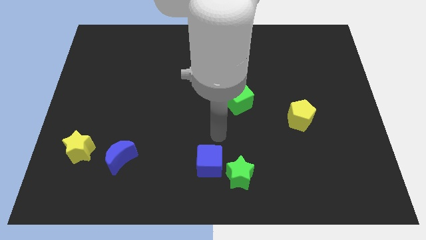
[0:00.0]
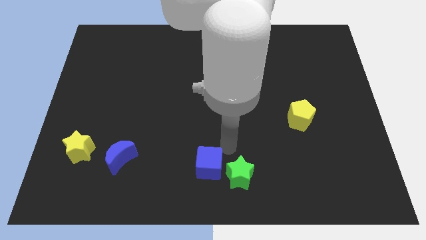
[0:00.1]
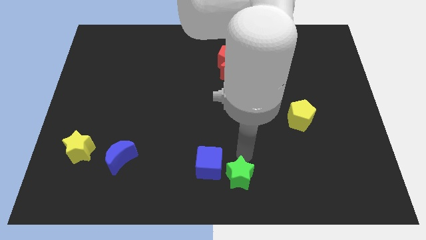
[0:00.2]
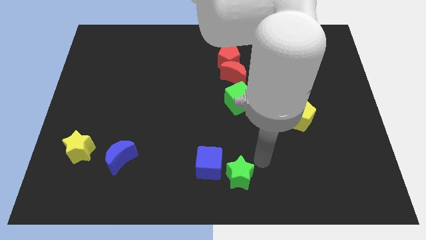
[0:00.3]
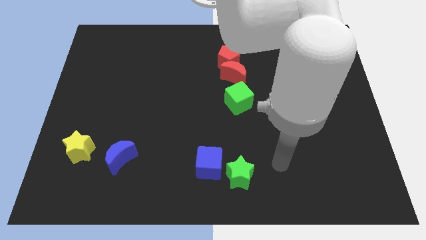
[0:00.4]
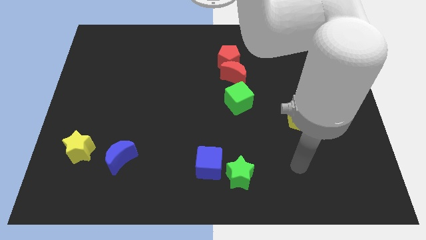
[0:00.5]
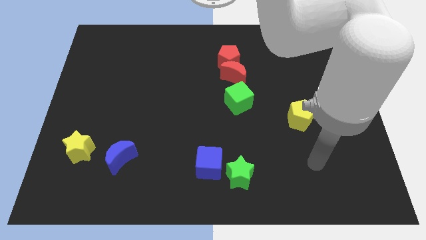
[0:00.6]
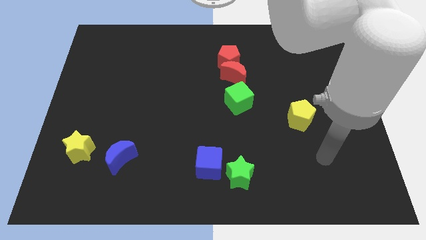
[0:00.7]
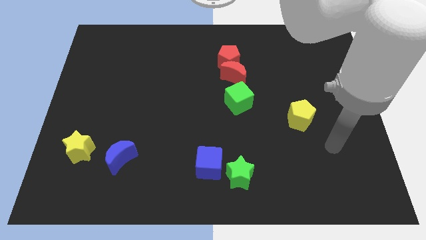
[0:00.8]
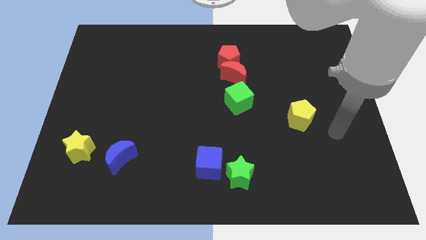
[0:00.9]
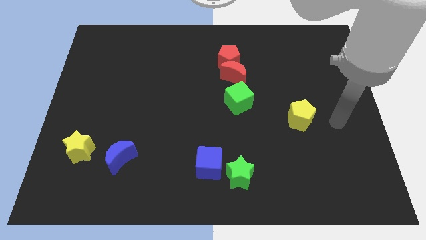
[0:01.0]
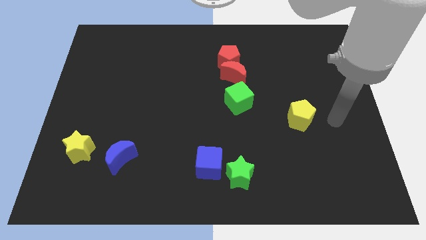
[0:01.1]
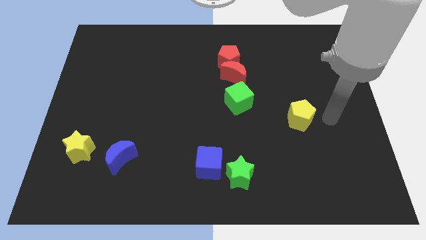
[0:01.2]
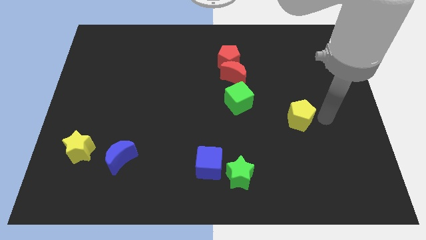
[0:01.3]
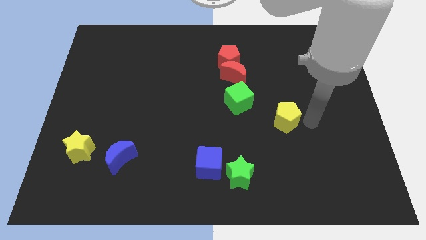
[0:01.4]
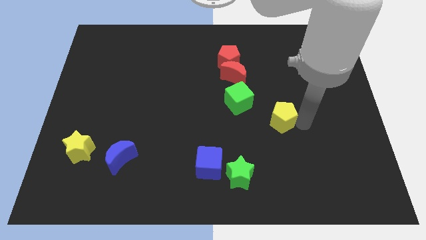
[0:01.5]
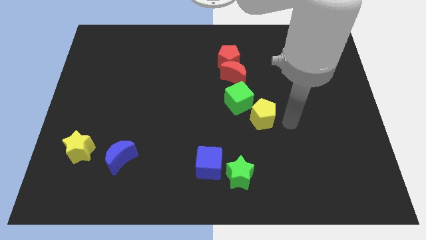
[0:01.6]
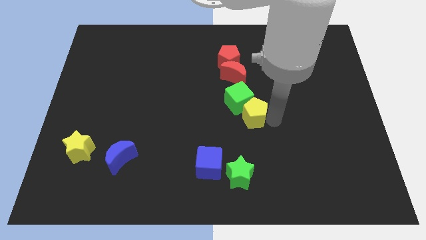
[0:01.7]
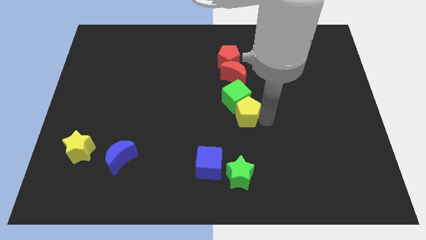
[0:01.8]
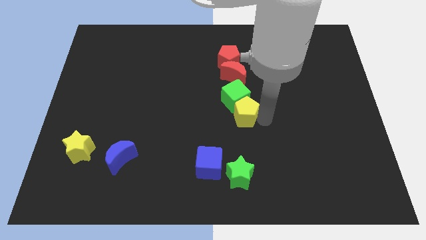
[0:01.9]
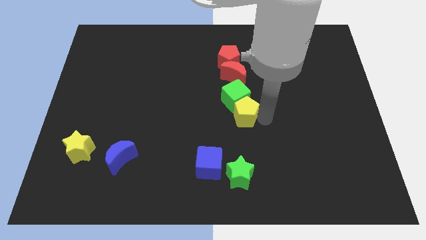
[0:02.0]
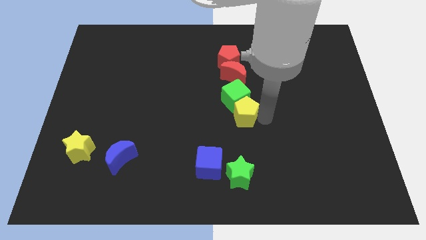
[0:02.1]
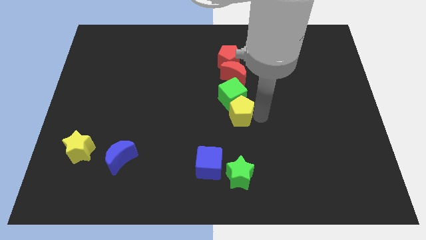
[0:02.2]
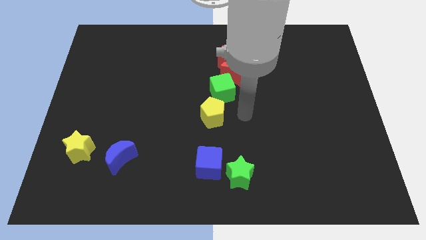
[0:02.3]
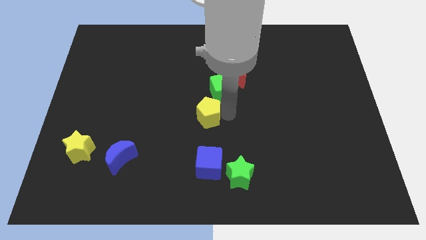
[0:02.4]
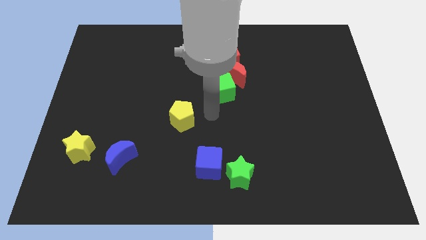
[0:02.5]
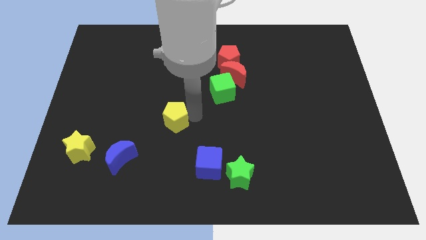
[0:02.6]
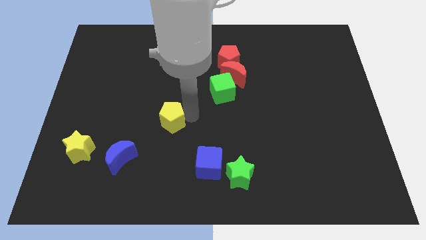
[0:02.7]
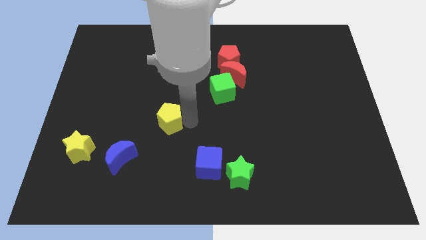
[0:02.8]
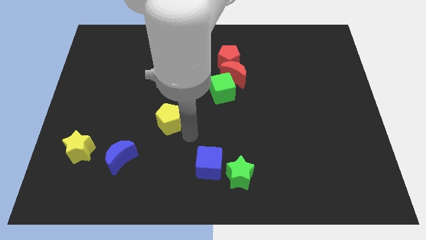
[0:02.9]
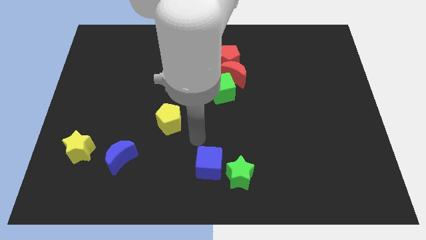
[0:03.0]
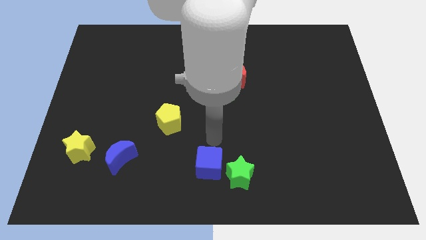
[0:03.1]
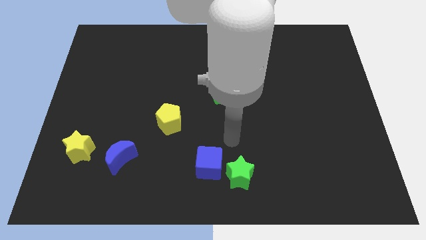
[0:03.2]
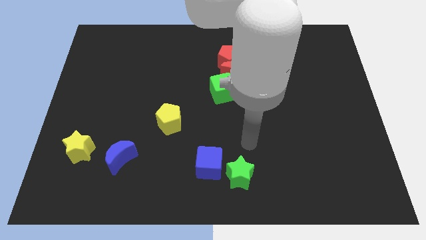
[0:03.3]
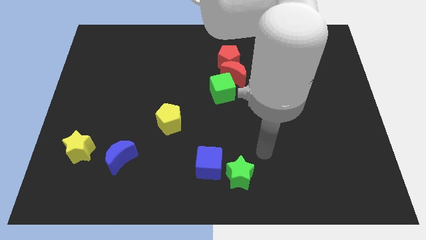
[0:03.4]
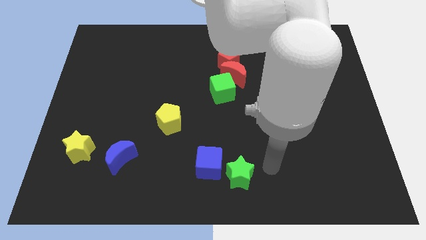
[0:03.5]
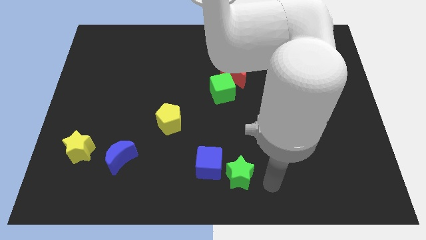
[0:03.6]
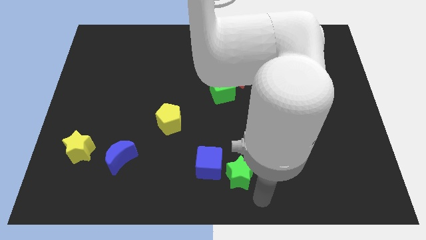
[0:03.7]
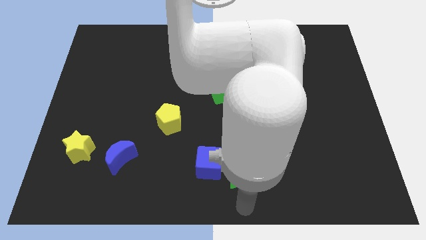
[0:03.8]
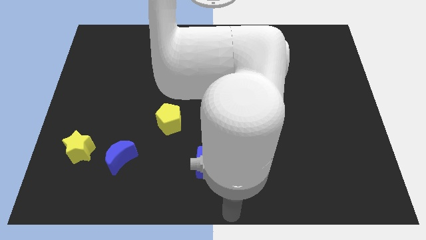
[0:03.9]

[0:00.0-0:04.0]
place the yellow pentagon diagonally to the right side of the blue moon

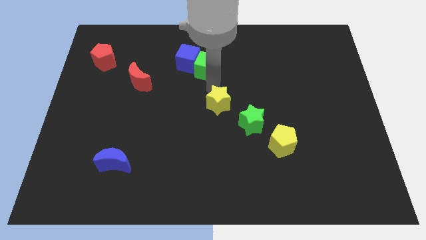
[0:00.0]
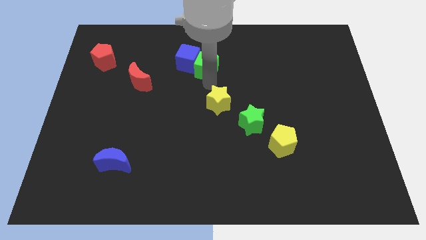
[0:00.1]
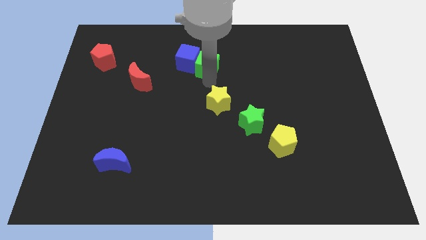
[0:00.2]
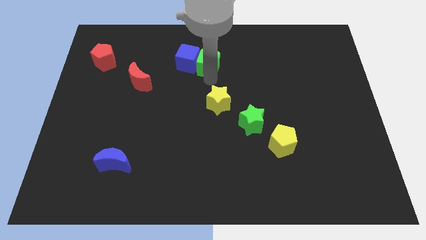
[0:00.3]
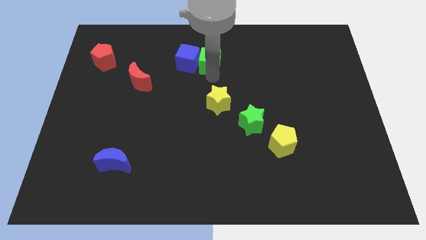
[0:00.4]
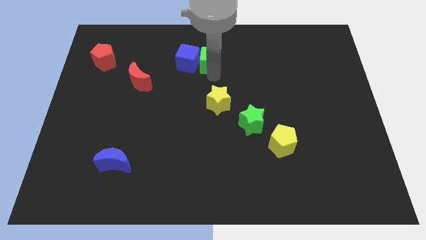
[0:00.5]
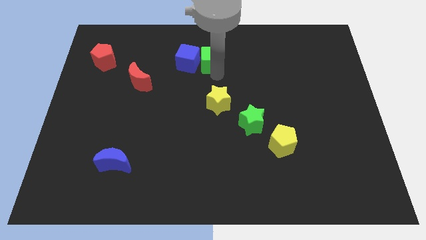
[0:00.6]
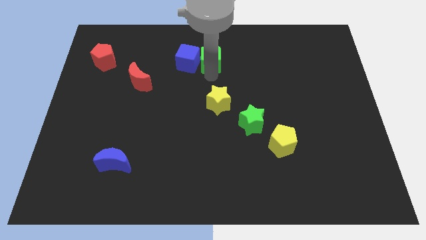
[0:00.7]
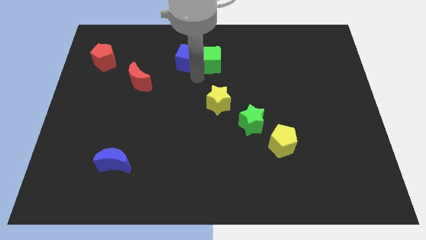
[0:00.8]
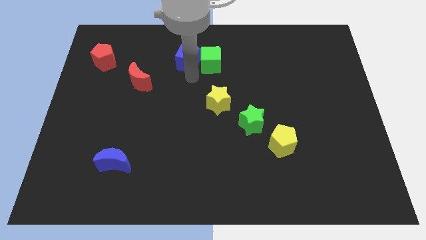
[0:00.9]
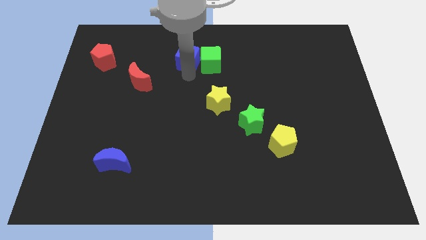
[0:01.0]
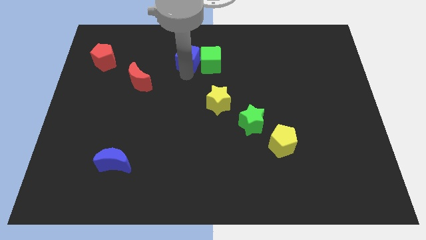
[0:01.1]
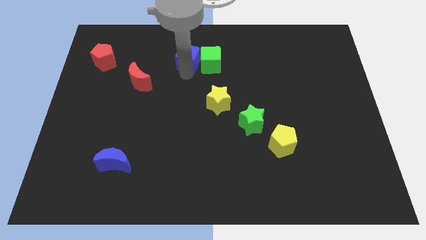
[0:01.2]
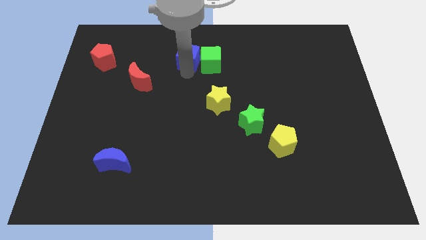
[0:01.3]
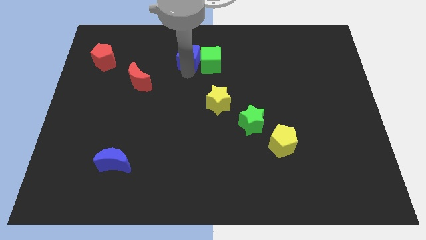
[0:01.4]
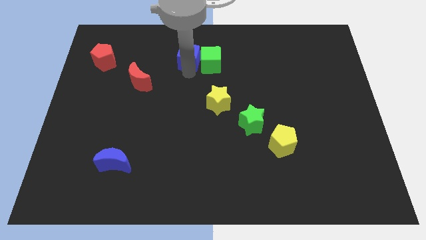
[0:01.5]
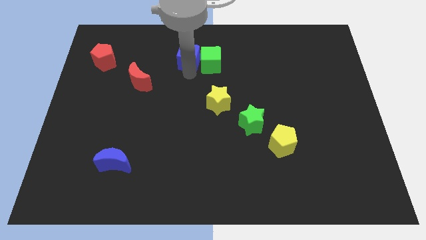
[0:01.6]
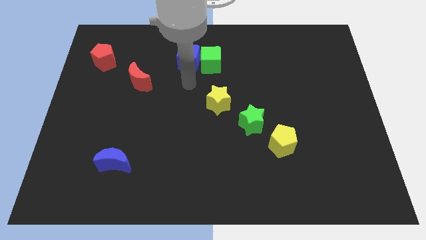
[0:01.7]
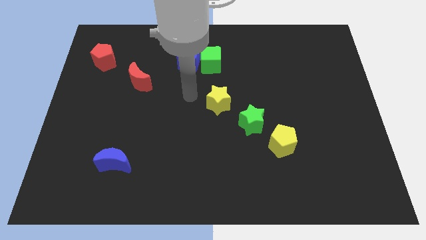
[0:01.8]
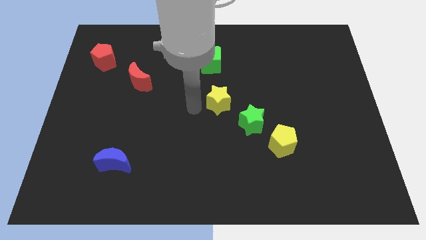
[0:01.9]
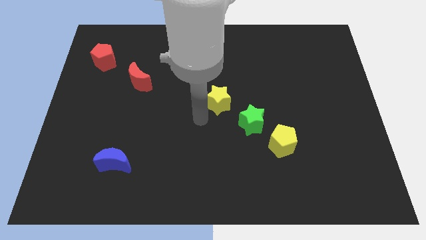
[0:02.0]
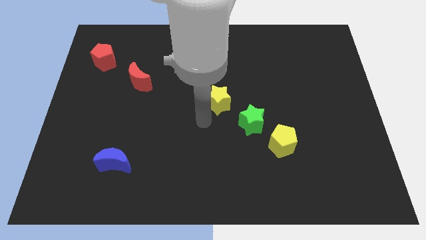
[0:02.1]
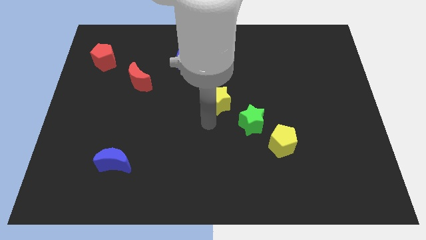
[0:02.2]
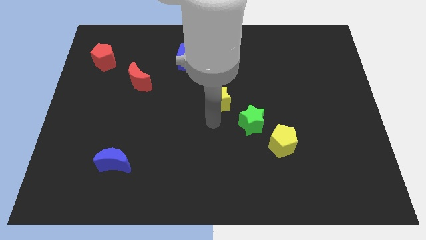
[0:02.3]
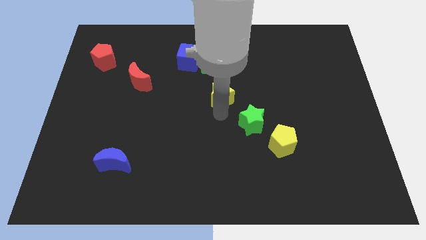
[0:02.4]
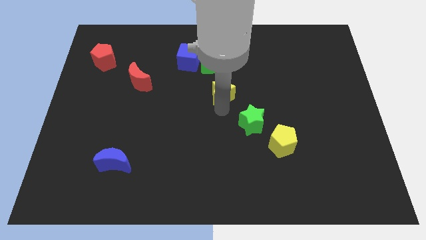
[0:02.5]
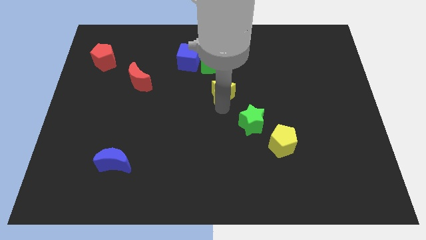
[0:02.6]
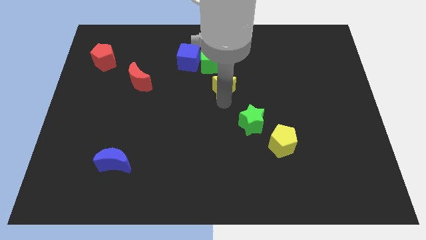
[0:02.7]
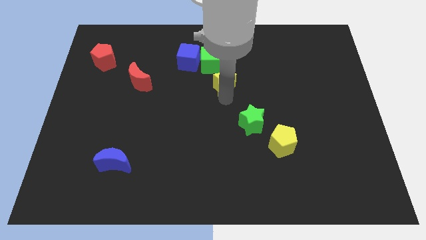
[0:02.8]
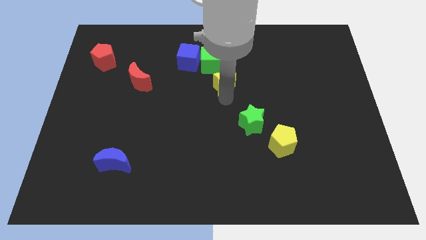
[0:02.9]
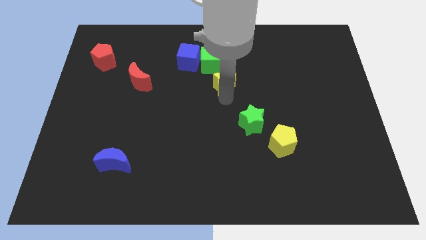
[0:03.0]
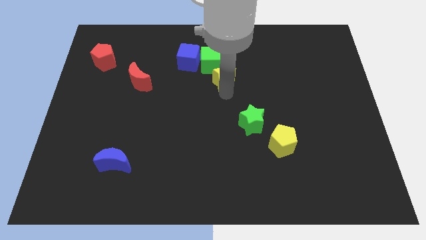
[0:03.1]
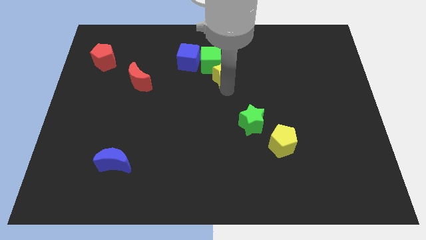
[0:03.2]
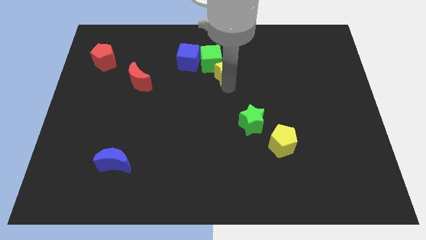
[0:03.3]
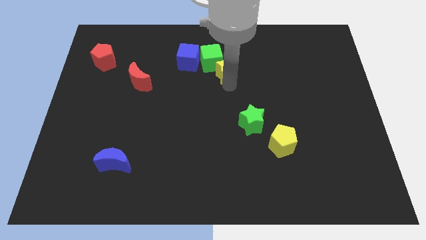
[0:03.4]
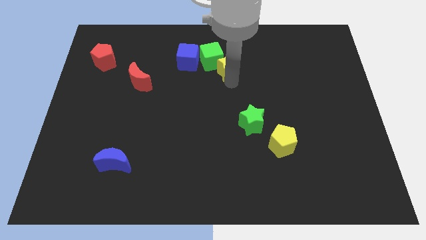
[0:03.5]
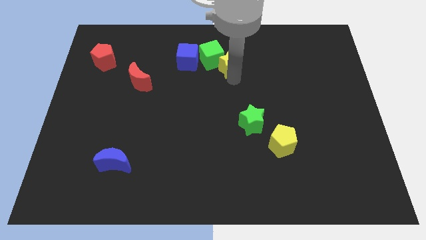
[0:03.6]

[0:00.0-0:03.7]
move the yellow star close to the green star

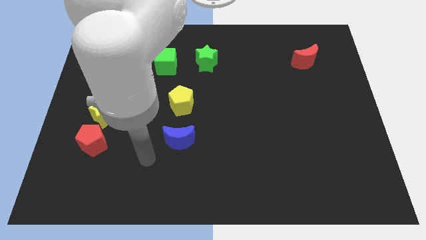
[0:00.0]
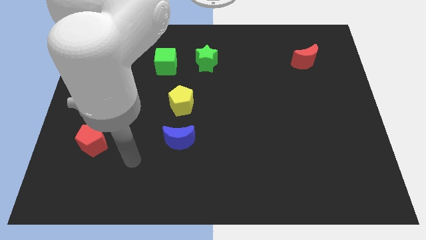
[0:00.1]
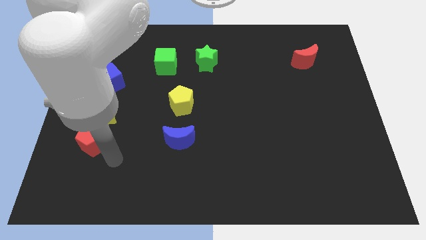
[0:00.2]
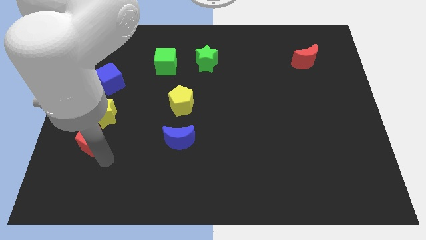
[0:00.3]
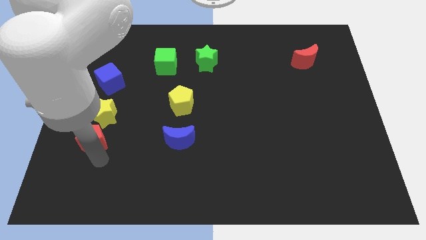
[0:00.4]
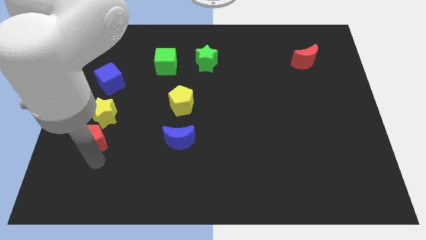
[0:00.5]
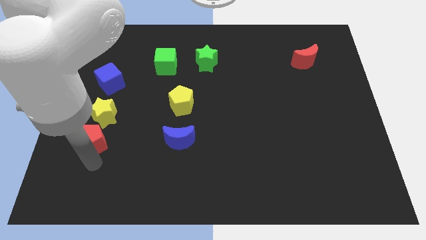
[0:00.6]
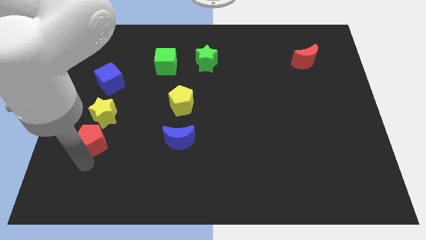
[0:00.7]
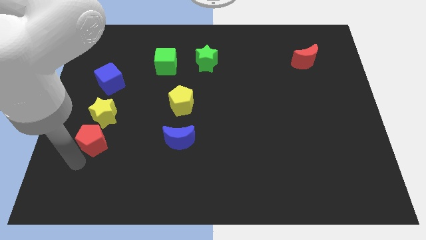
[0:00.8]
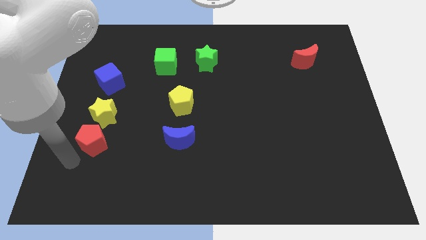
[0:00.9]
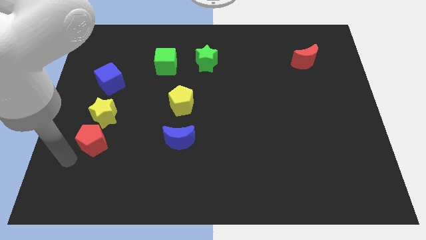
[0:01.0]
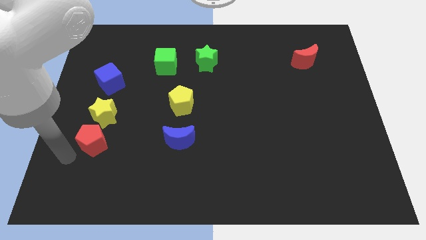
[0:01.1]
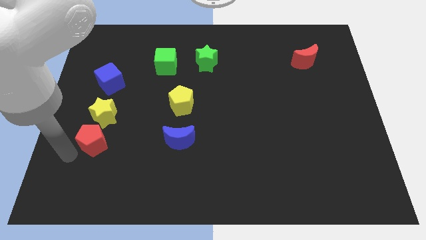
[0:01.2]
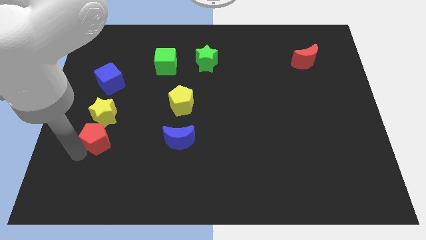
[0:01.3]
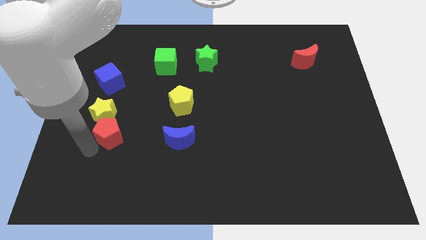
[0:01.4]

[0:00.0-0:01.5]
place your arm left to the red pentagon
